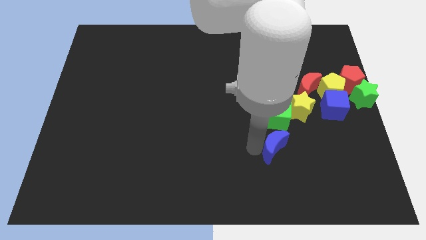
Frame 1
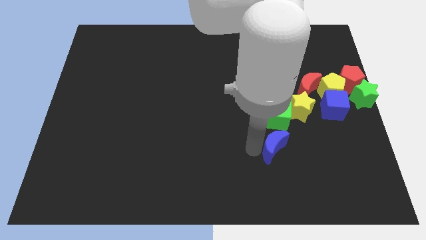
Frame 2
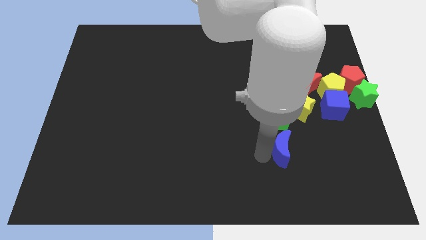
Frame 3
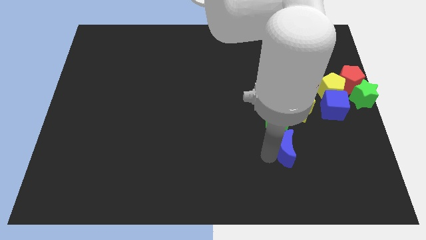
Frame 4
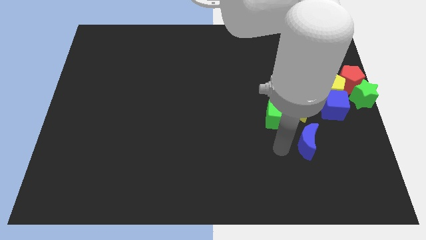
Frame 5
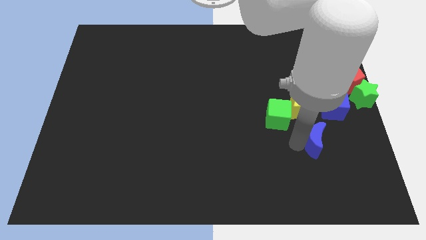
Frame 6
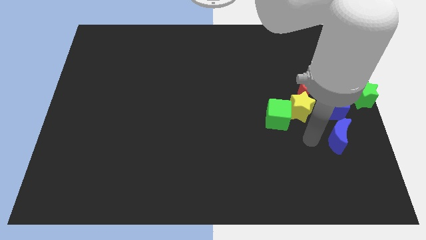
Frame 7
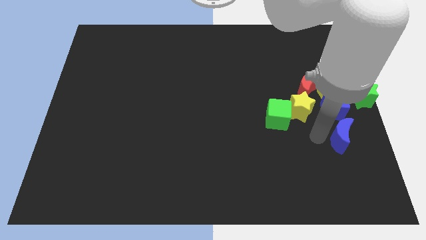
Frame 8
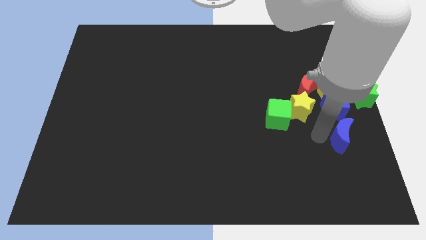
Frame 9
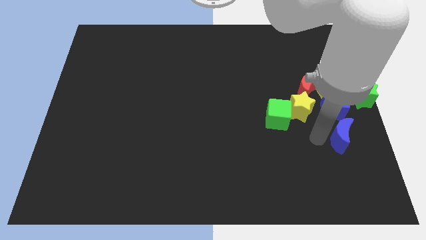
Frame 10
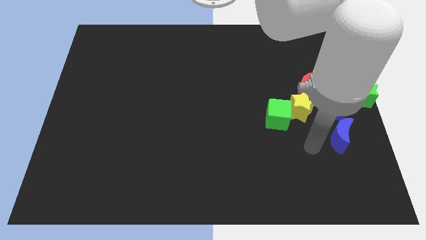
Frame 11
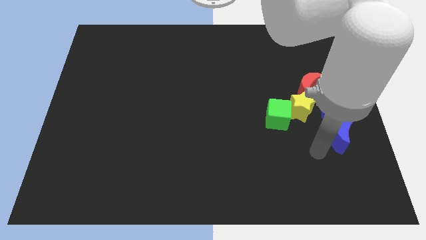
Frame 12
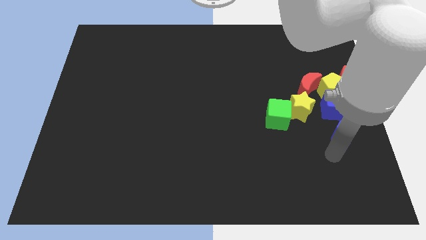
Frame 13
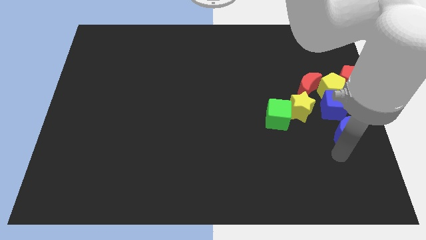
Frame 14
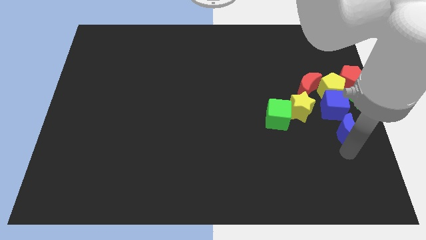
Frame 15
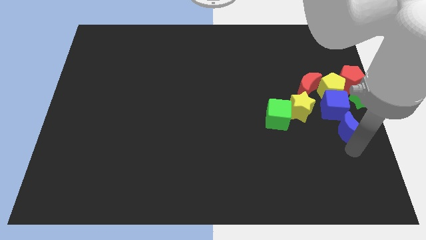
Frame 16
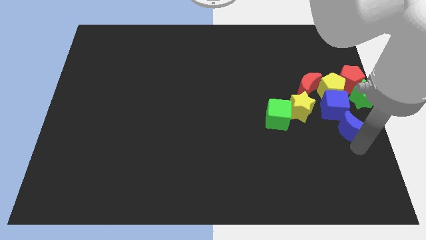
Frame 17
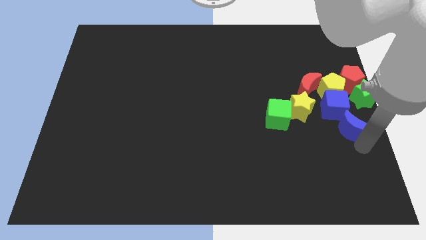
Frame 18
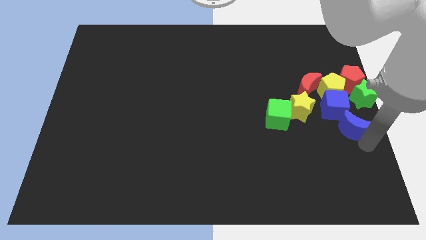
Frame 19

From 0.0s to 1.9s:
place the blue moon below the blue cube

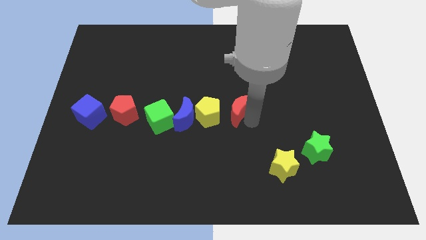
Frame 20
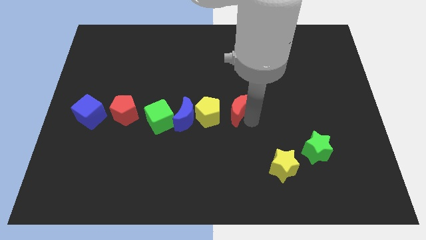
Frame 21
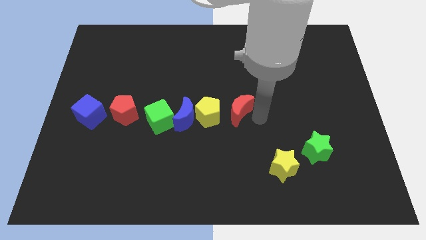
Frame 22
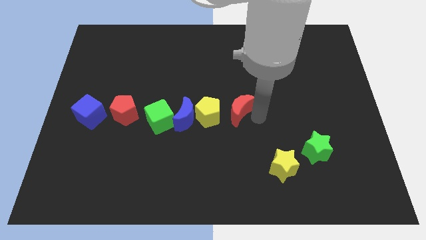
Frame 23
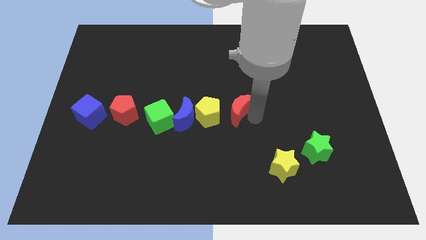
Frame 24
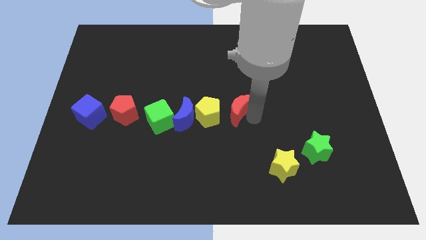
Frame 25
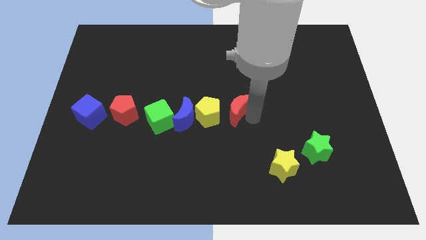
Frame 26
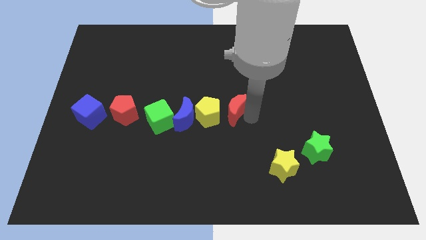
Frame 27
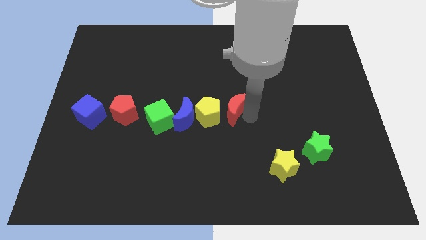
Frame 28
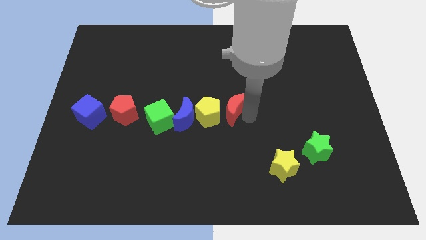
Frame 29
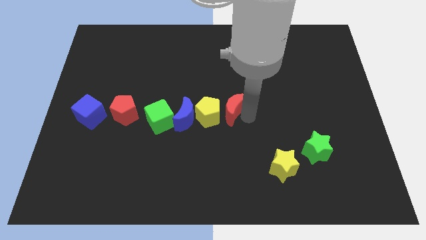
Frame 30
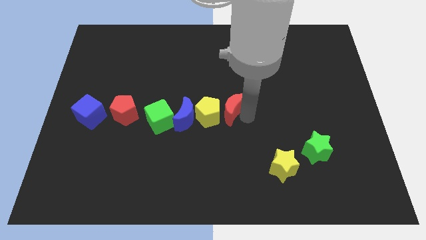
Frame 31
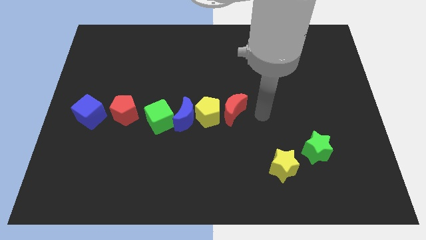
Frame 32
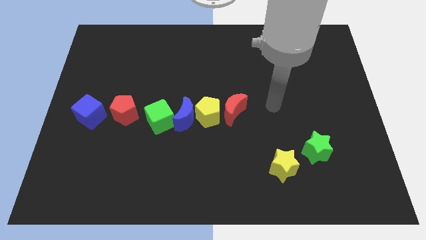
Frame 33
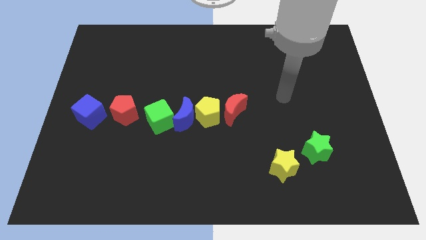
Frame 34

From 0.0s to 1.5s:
place red crescent on the right side of the yellow pentagon

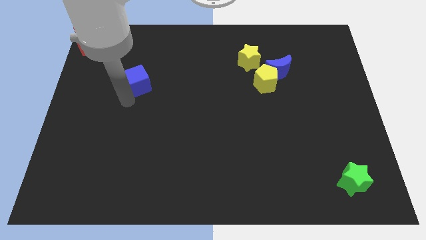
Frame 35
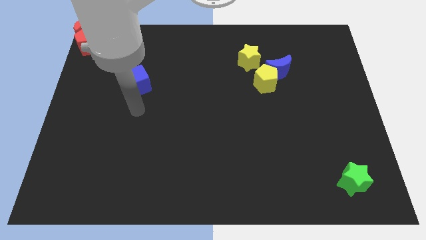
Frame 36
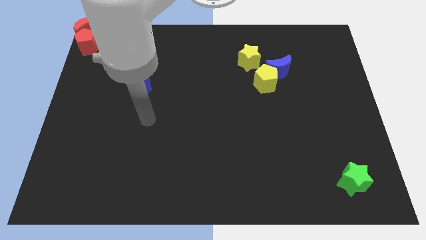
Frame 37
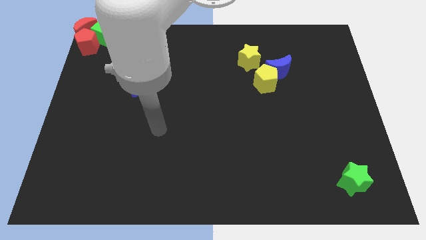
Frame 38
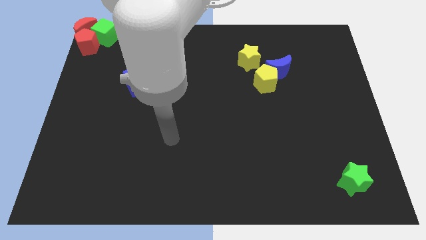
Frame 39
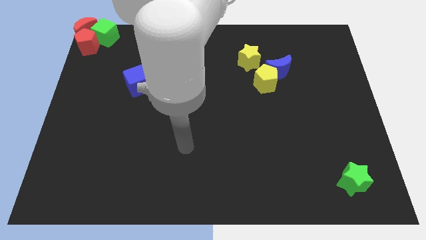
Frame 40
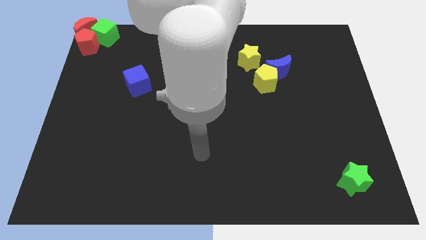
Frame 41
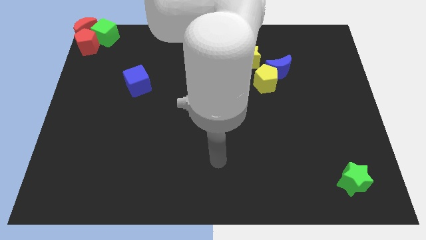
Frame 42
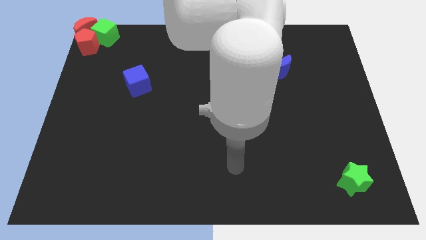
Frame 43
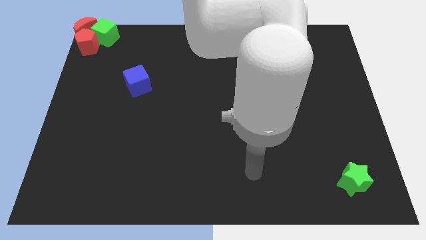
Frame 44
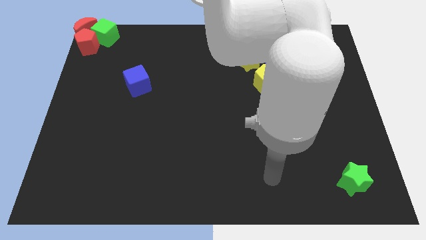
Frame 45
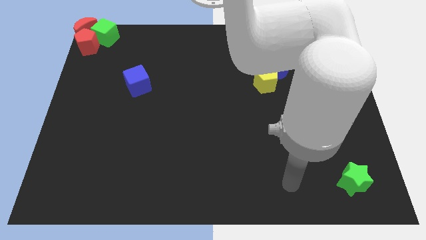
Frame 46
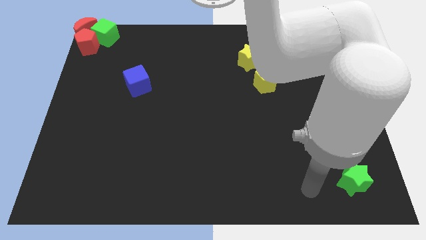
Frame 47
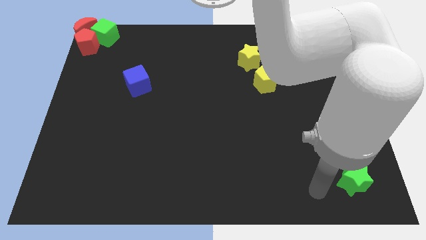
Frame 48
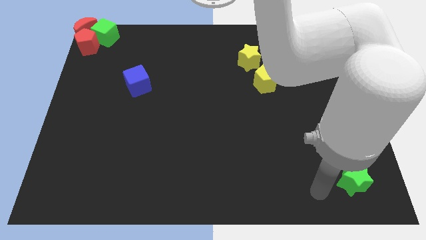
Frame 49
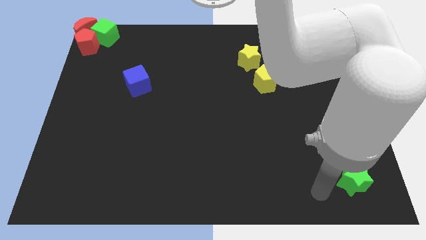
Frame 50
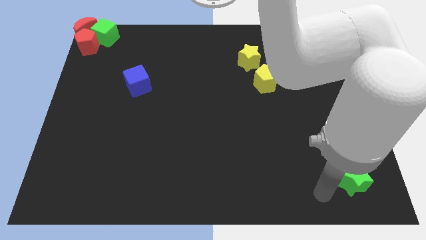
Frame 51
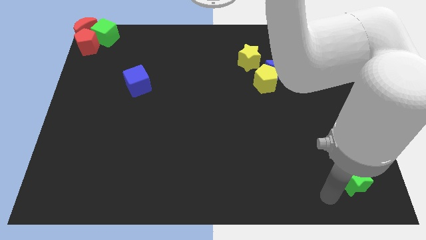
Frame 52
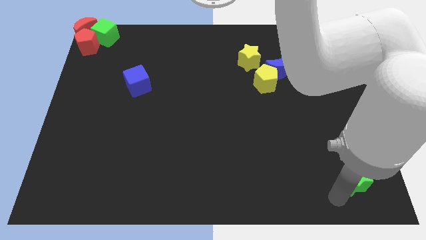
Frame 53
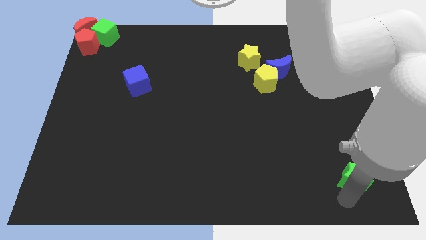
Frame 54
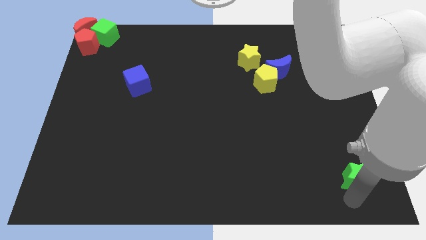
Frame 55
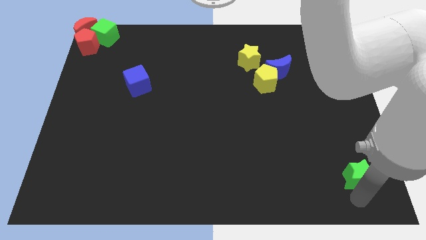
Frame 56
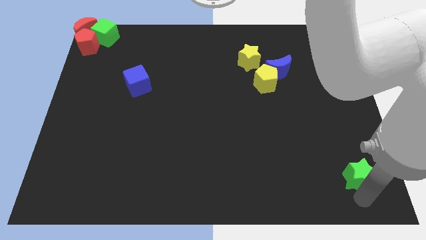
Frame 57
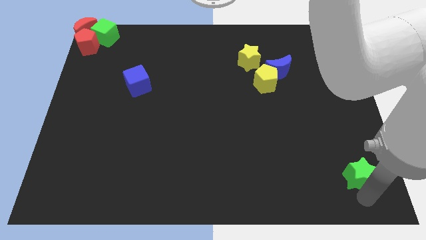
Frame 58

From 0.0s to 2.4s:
go away from the blue cube

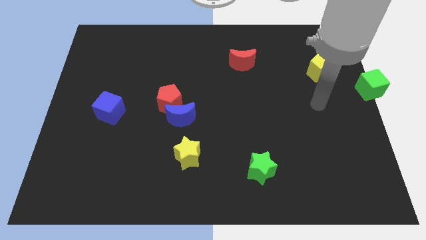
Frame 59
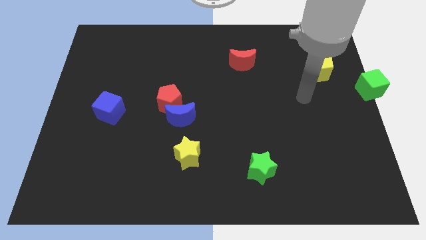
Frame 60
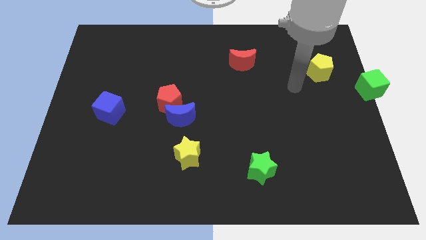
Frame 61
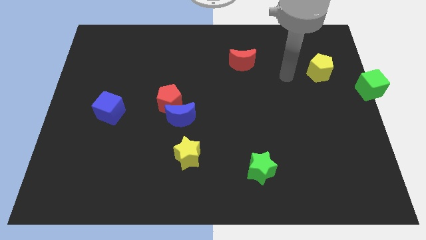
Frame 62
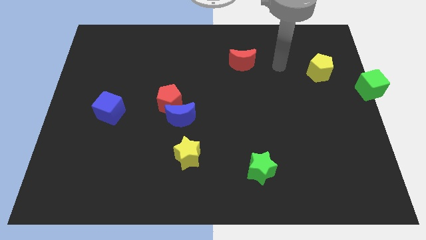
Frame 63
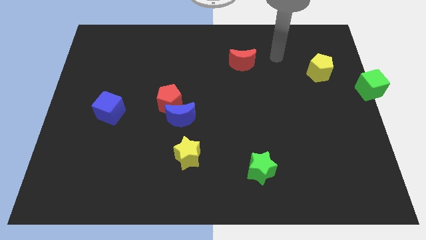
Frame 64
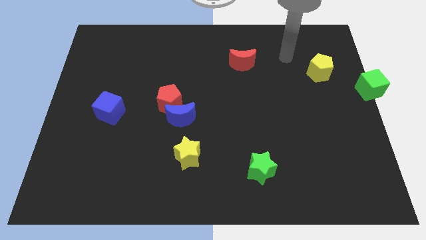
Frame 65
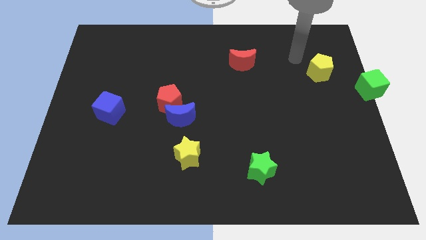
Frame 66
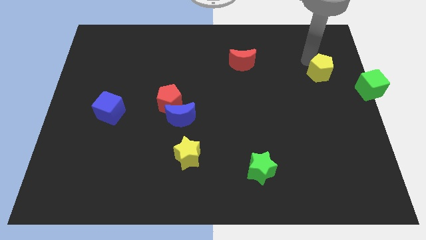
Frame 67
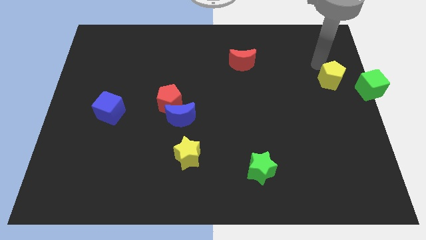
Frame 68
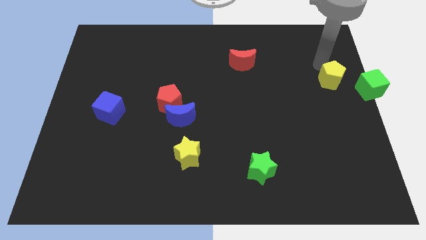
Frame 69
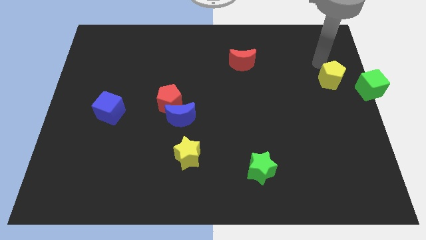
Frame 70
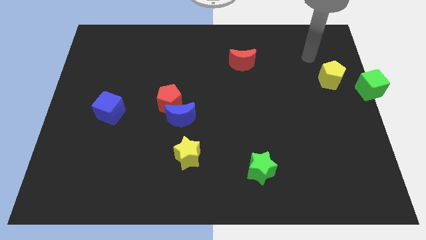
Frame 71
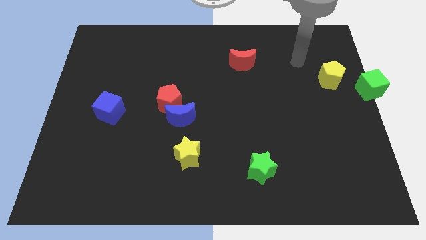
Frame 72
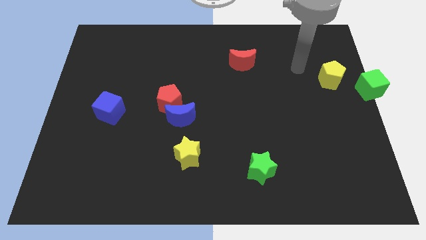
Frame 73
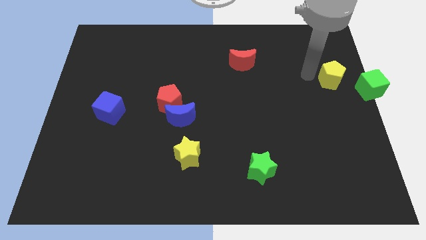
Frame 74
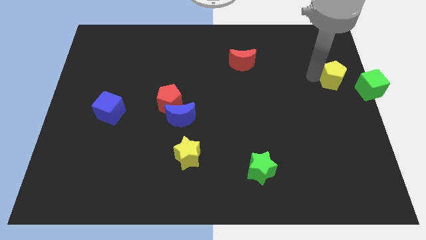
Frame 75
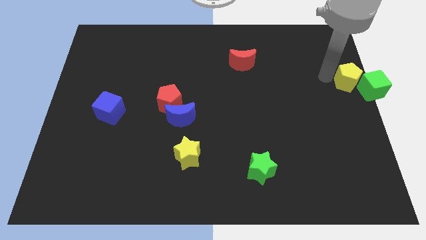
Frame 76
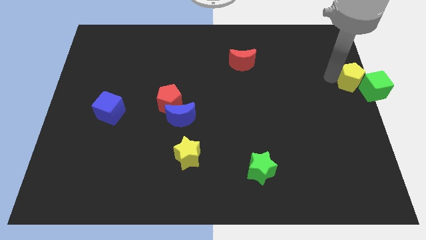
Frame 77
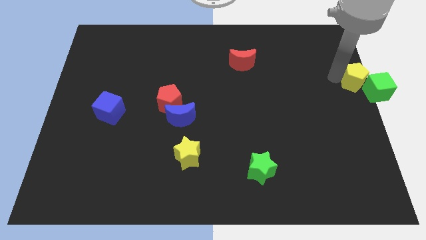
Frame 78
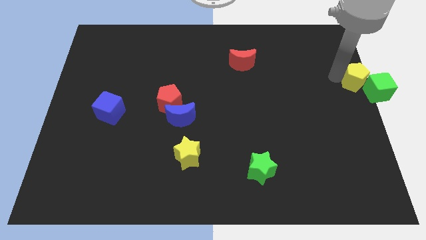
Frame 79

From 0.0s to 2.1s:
move yellow pentagon into green cube

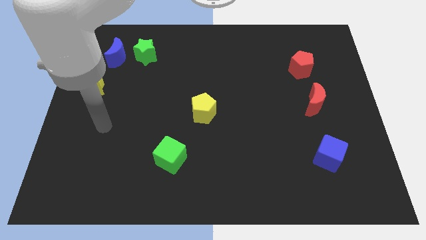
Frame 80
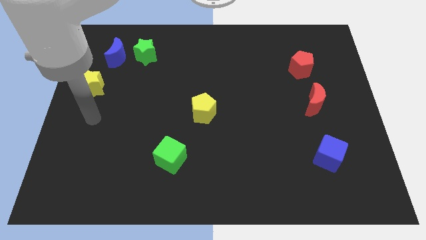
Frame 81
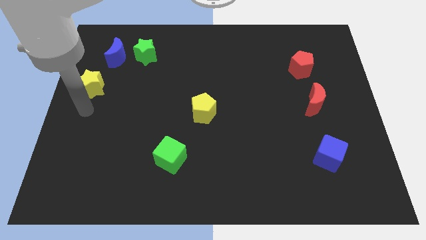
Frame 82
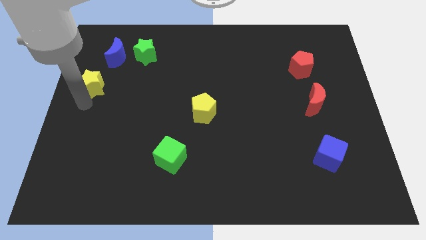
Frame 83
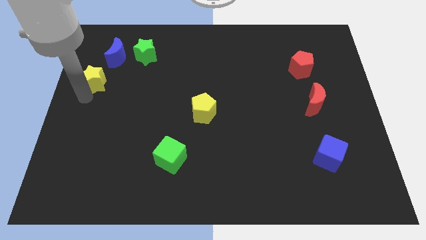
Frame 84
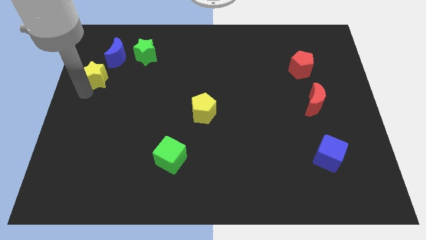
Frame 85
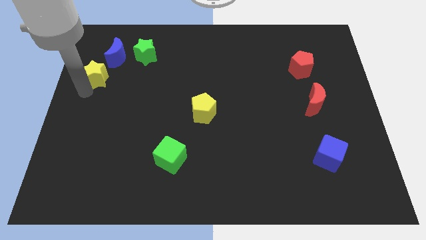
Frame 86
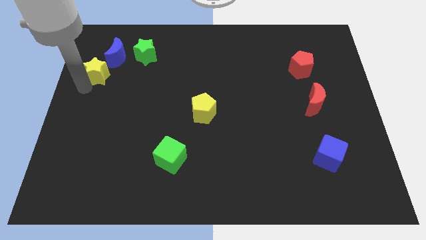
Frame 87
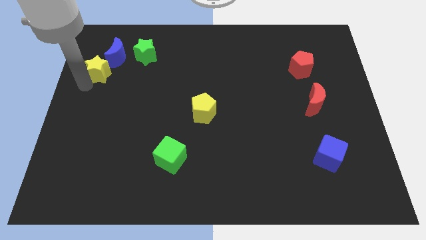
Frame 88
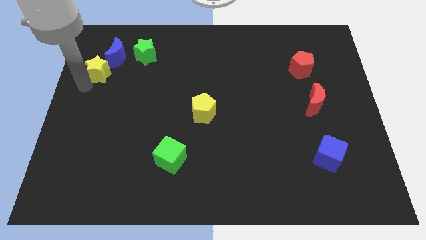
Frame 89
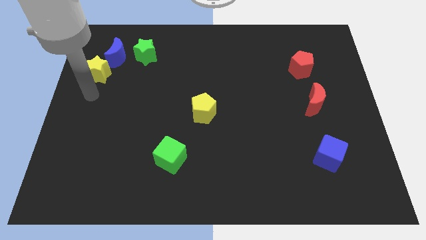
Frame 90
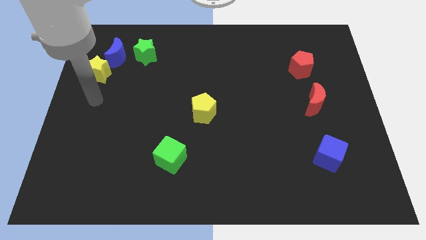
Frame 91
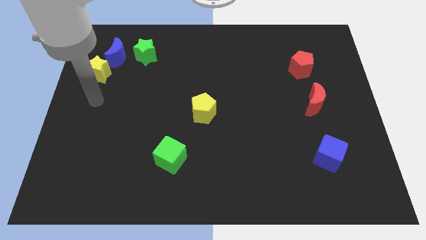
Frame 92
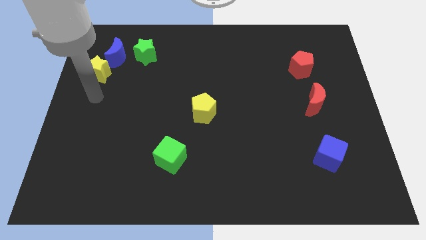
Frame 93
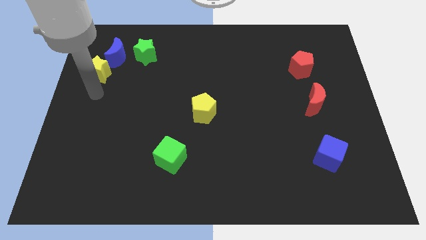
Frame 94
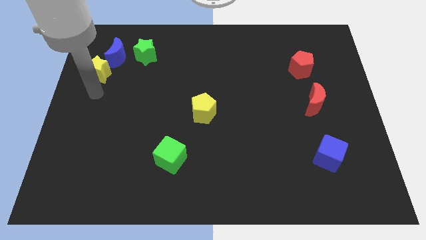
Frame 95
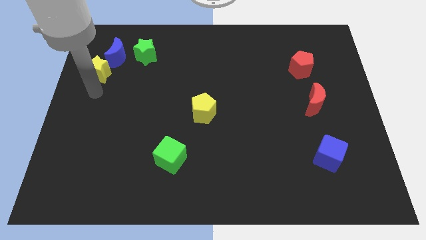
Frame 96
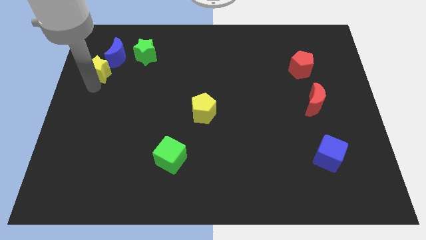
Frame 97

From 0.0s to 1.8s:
move the yellow star into the blue crescent
